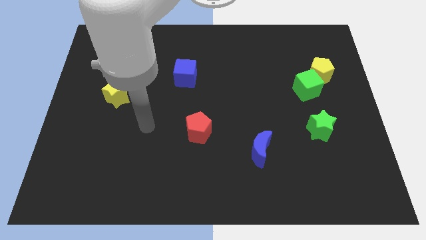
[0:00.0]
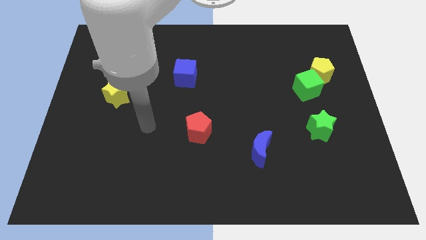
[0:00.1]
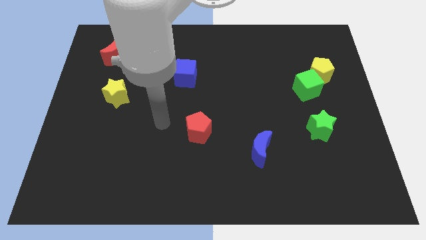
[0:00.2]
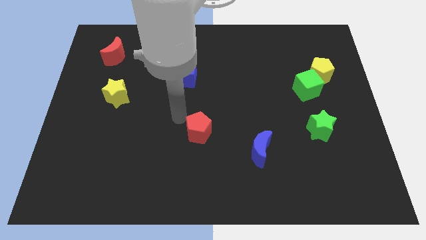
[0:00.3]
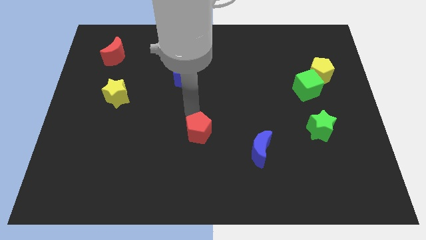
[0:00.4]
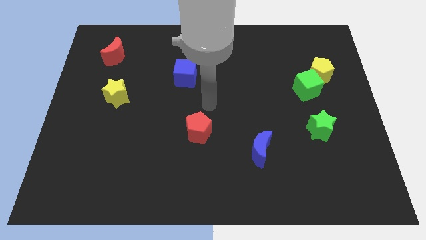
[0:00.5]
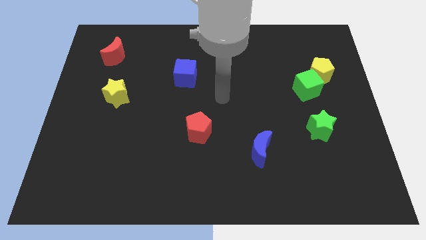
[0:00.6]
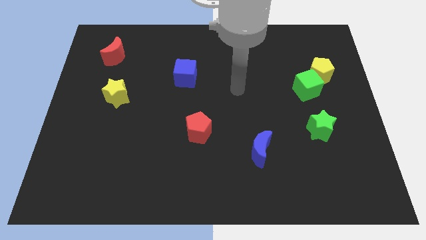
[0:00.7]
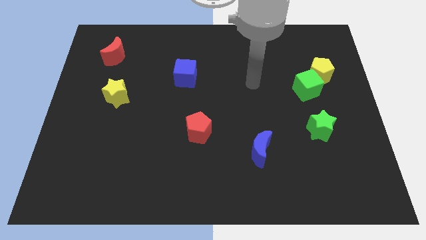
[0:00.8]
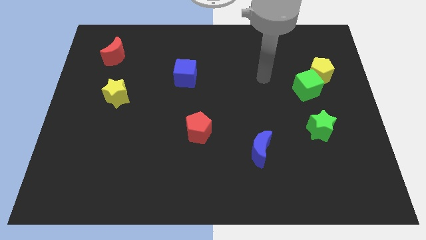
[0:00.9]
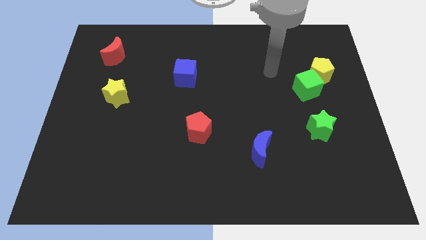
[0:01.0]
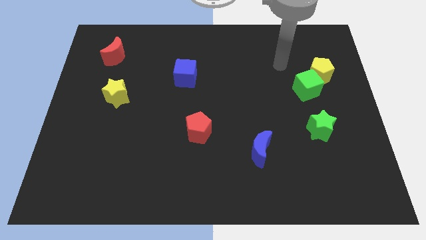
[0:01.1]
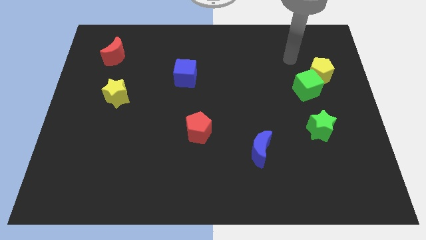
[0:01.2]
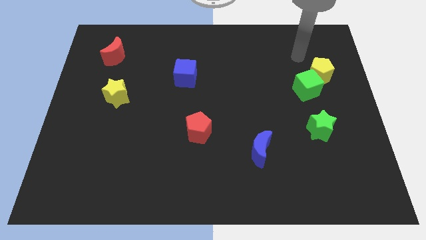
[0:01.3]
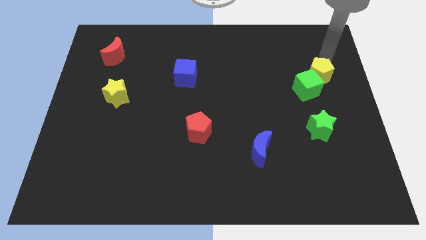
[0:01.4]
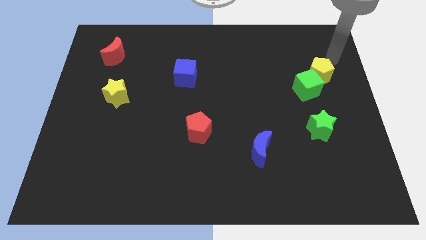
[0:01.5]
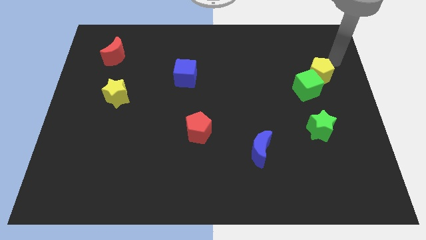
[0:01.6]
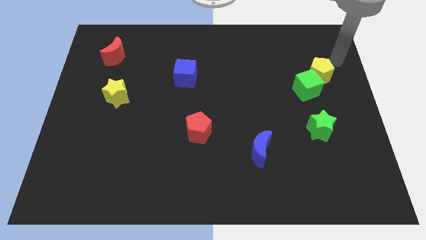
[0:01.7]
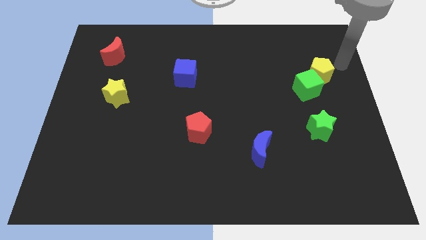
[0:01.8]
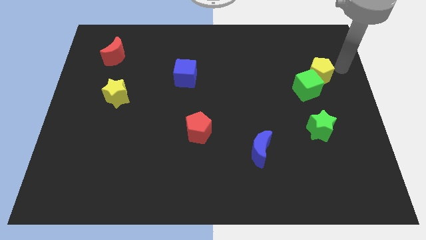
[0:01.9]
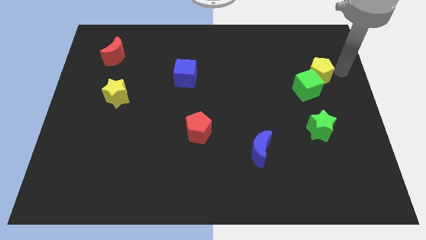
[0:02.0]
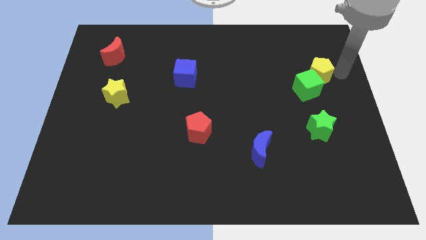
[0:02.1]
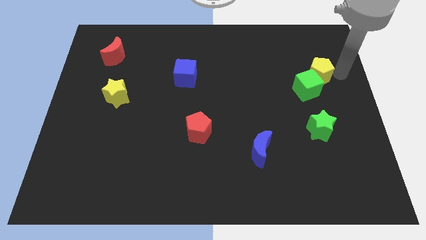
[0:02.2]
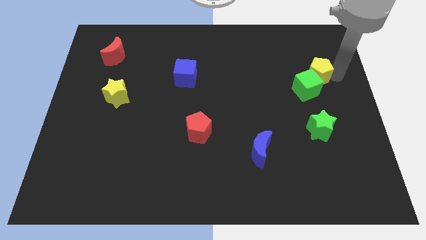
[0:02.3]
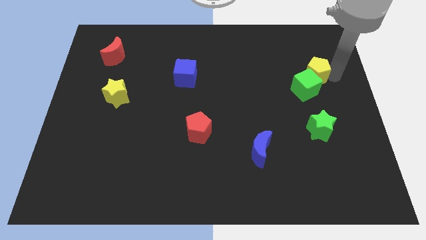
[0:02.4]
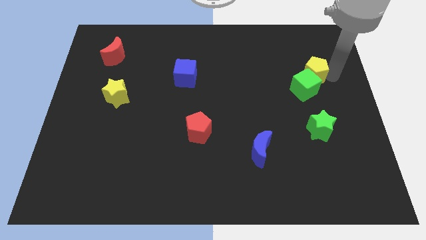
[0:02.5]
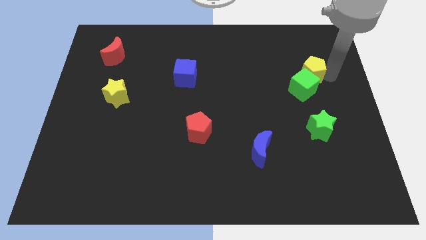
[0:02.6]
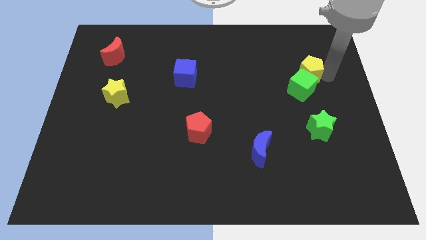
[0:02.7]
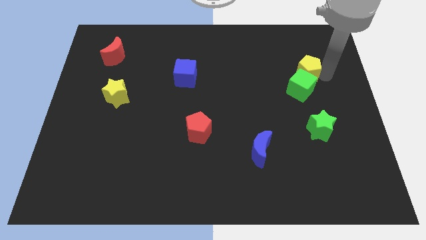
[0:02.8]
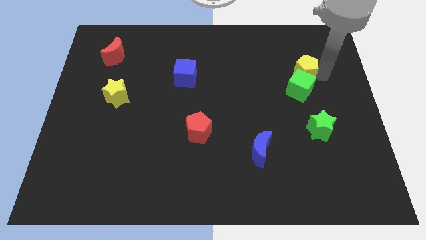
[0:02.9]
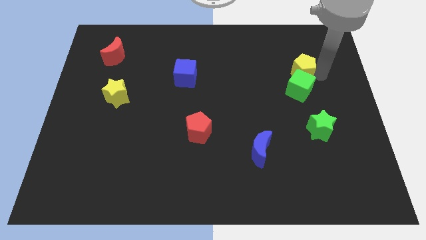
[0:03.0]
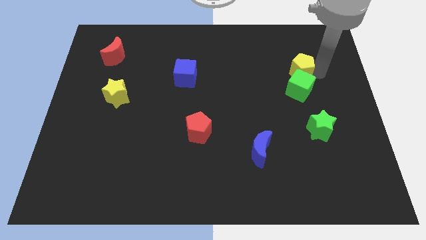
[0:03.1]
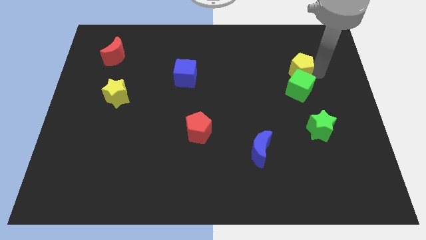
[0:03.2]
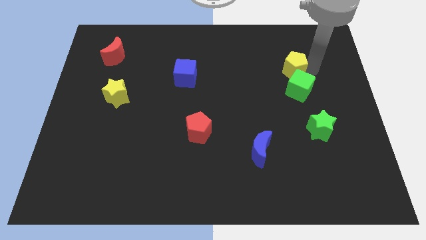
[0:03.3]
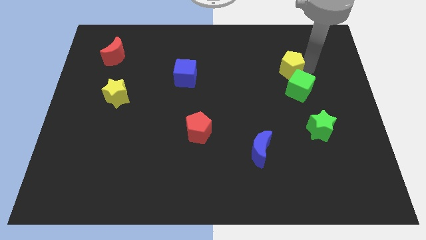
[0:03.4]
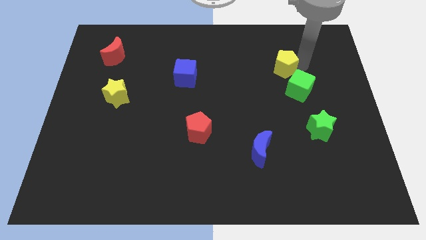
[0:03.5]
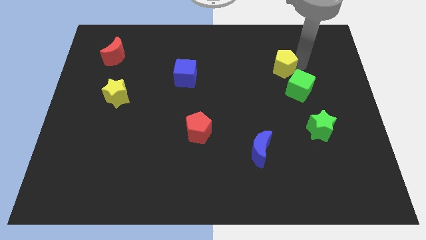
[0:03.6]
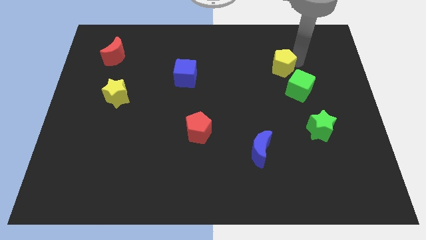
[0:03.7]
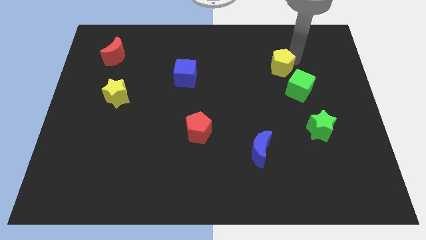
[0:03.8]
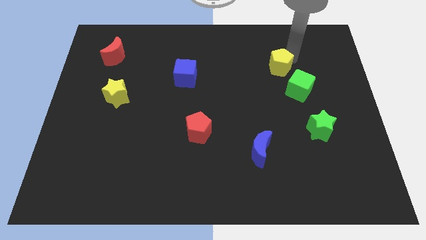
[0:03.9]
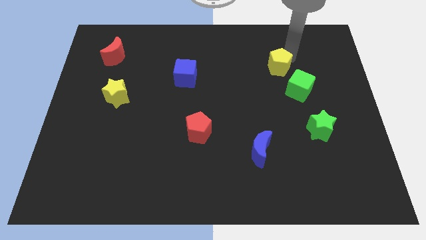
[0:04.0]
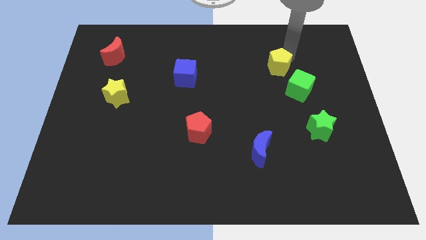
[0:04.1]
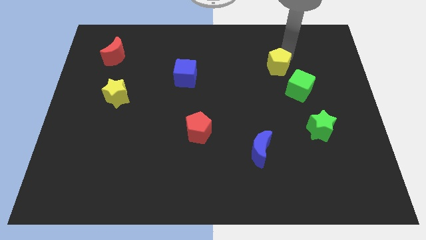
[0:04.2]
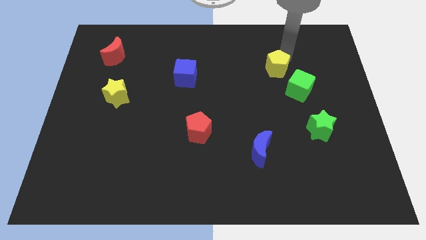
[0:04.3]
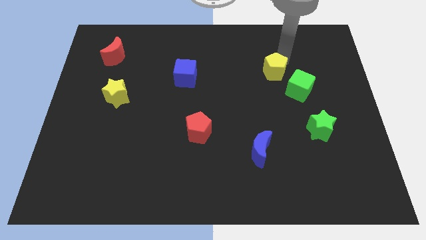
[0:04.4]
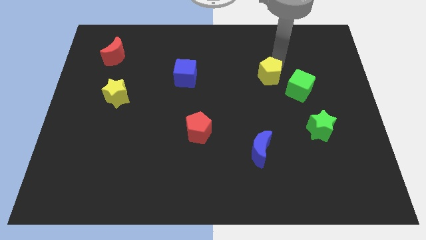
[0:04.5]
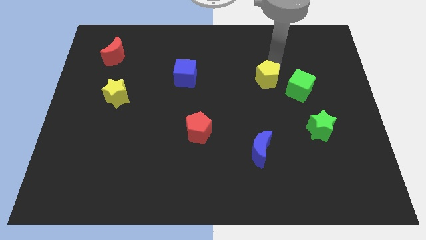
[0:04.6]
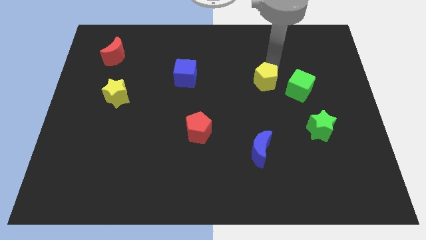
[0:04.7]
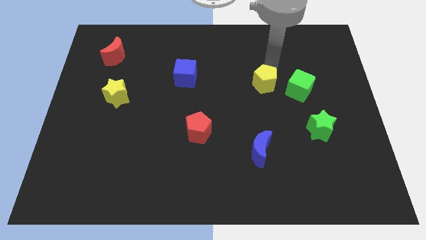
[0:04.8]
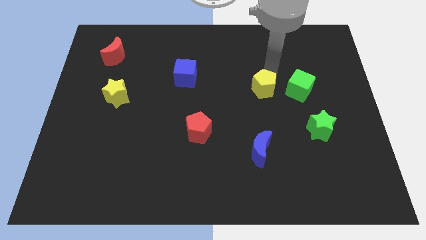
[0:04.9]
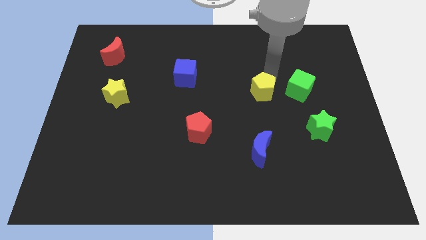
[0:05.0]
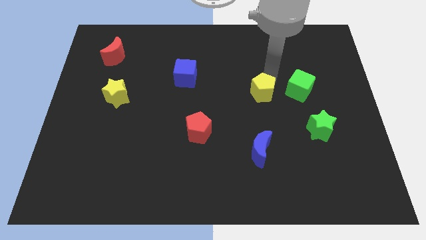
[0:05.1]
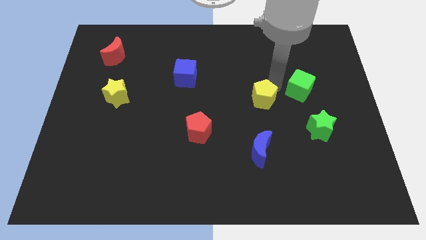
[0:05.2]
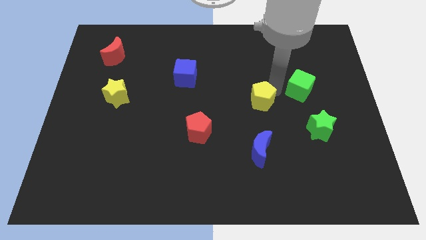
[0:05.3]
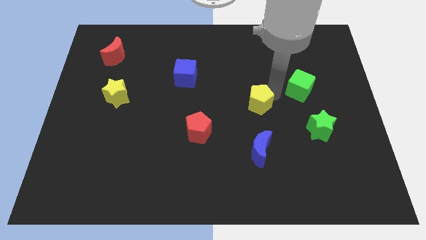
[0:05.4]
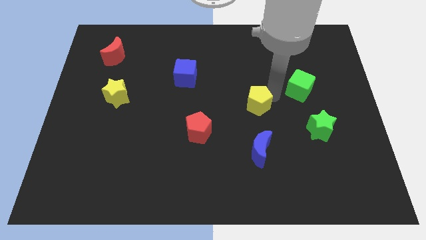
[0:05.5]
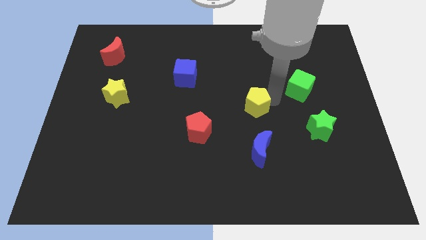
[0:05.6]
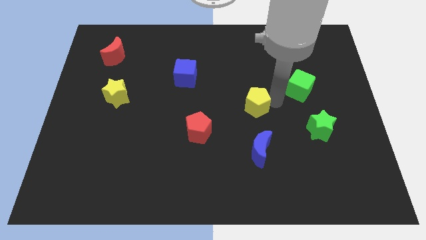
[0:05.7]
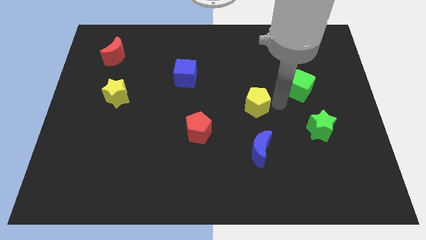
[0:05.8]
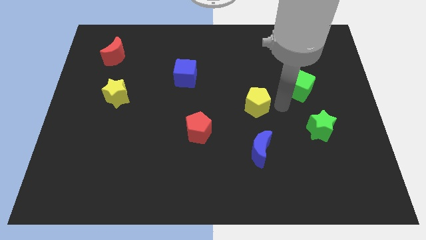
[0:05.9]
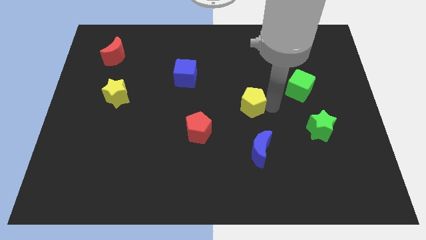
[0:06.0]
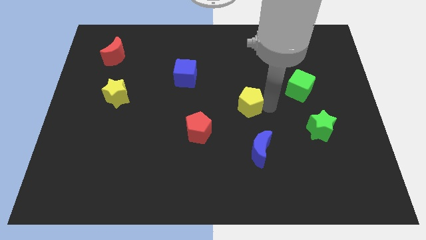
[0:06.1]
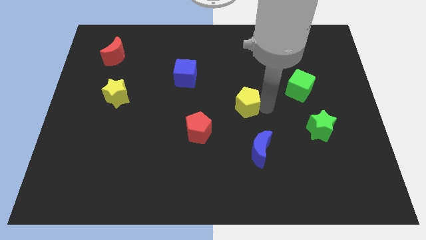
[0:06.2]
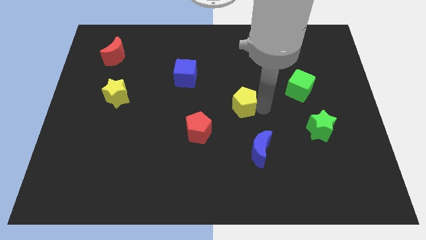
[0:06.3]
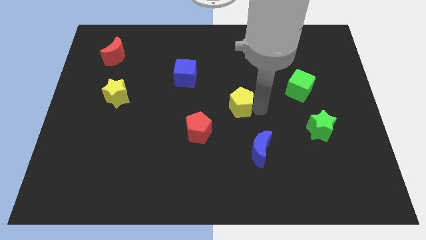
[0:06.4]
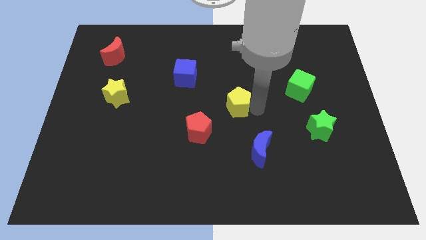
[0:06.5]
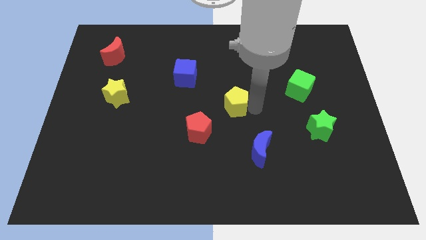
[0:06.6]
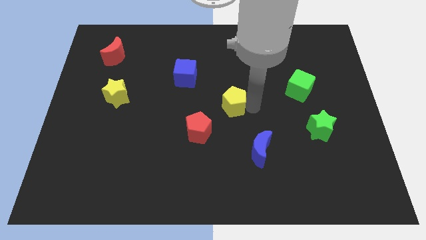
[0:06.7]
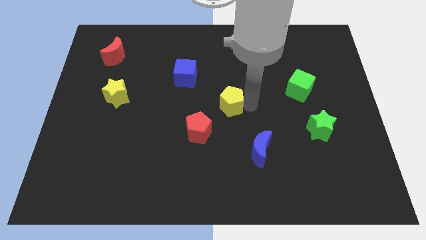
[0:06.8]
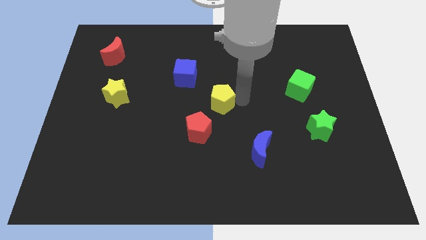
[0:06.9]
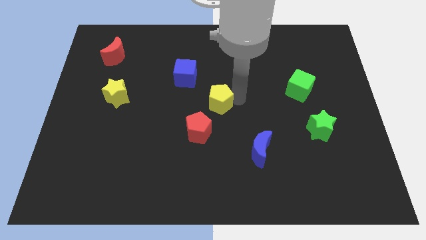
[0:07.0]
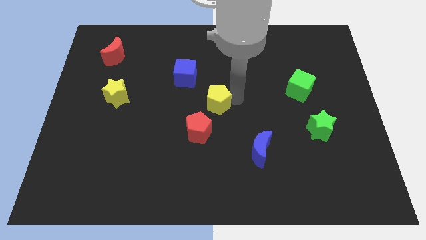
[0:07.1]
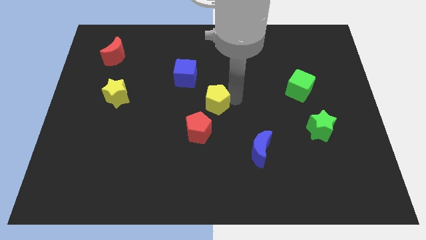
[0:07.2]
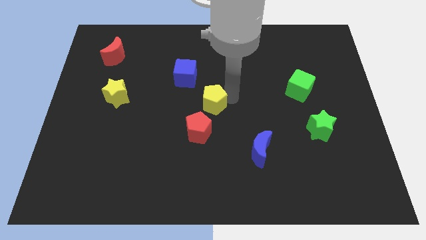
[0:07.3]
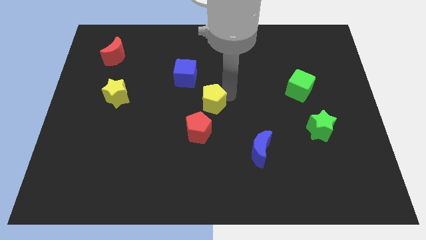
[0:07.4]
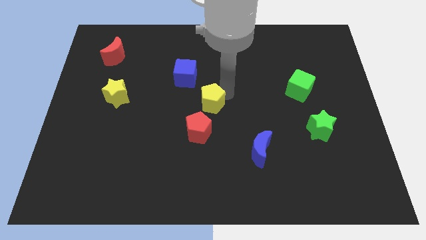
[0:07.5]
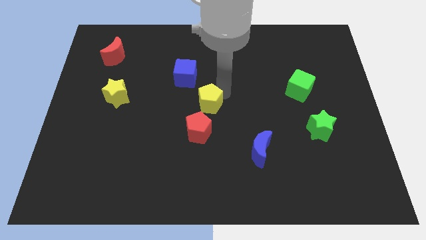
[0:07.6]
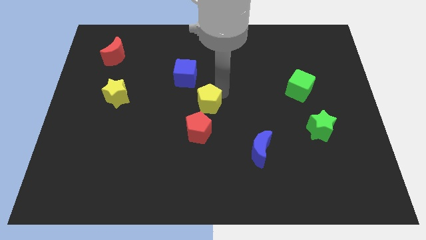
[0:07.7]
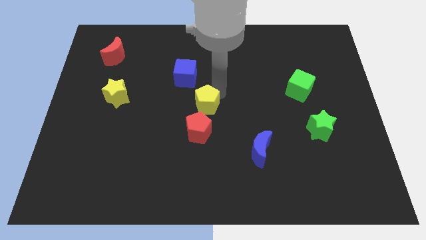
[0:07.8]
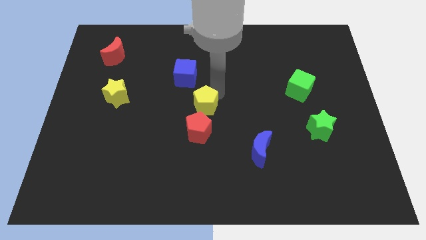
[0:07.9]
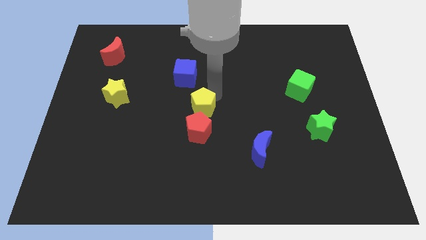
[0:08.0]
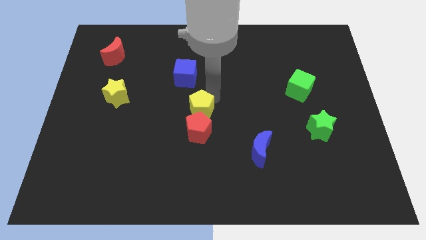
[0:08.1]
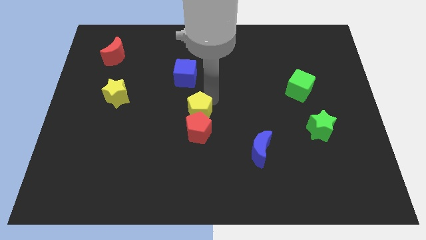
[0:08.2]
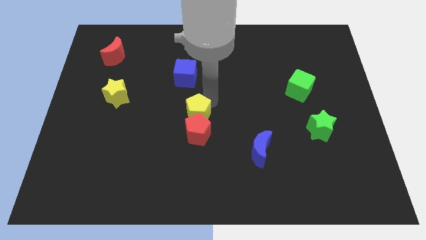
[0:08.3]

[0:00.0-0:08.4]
put the yellow pentagon next to the red pentagon

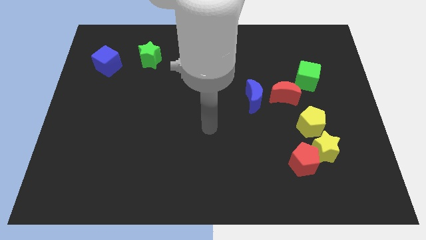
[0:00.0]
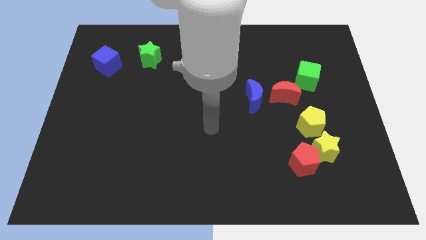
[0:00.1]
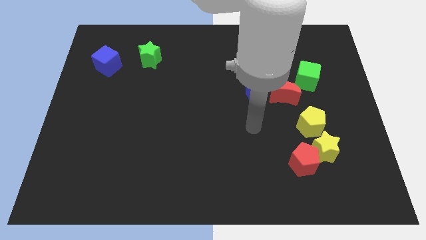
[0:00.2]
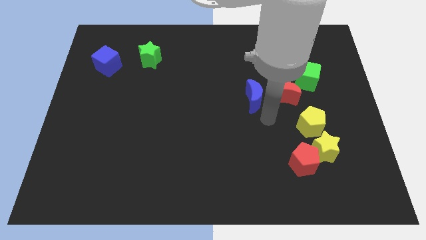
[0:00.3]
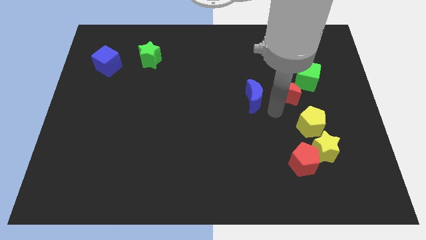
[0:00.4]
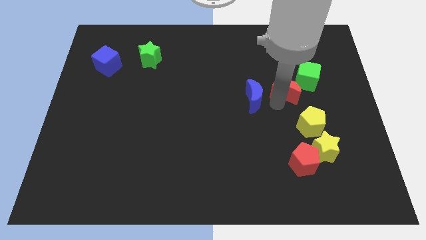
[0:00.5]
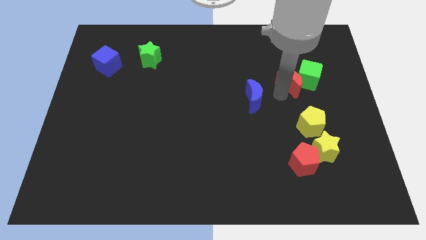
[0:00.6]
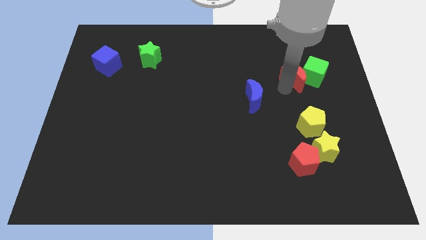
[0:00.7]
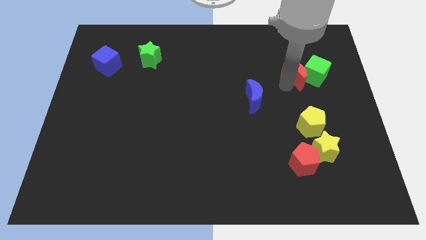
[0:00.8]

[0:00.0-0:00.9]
put the red moon next to the green cube
